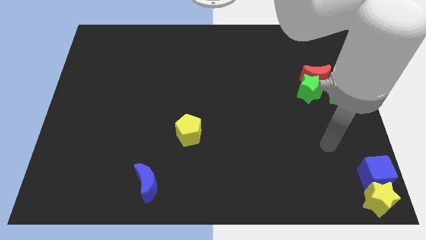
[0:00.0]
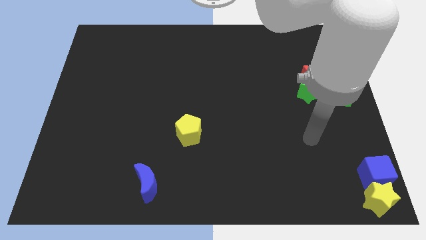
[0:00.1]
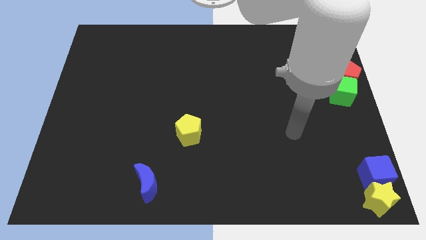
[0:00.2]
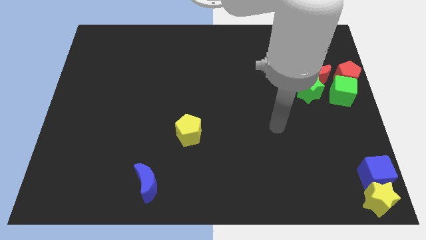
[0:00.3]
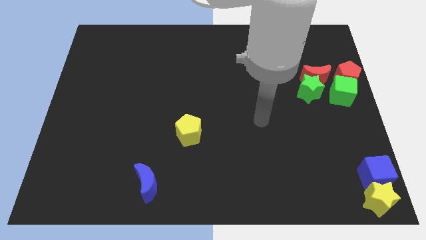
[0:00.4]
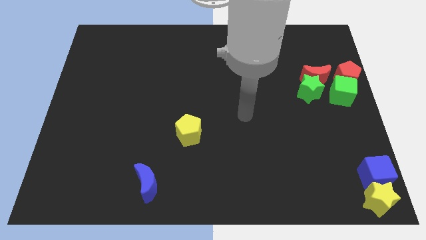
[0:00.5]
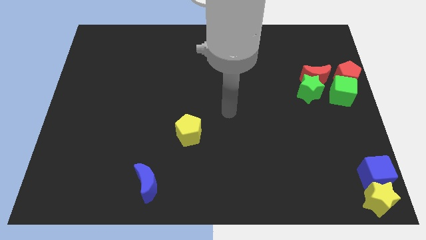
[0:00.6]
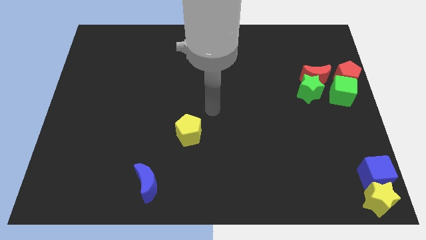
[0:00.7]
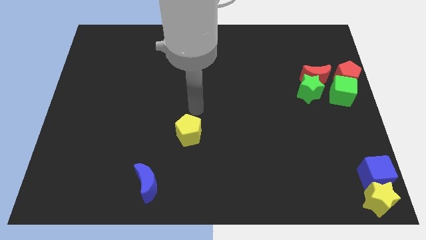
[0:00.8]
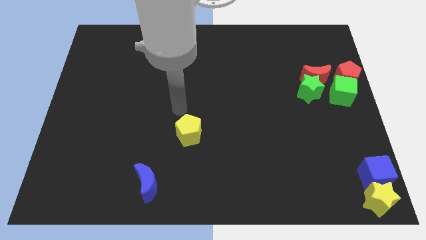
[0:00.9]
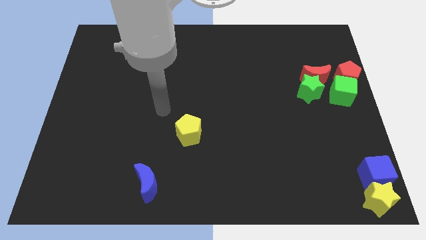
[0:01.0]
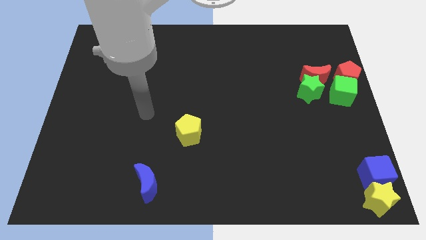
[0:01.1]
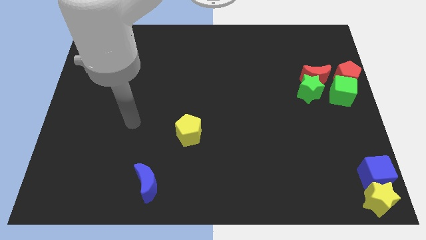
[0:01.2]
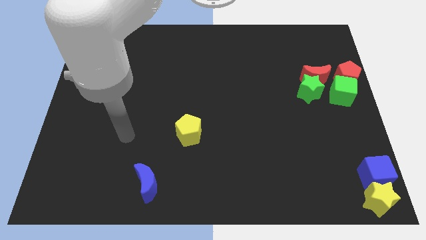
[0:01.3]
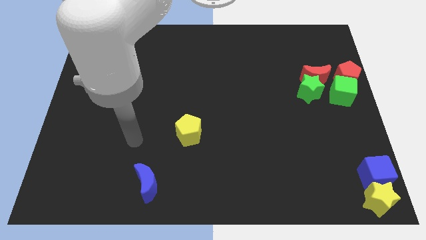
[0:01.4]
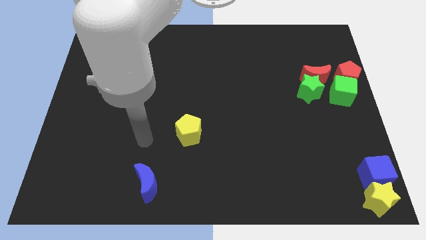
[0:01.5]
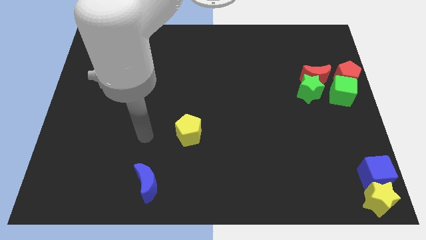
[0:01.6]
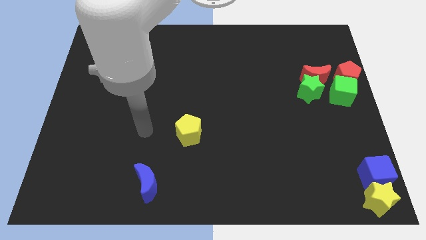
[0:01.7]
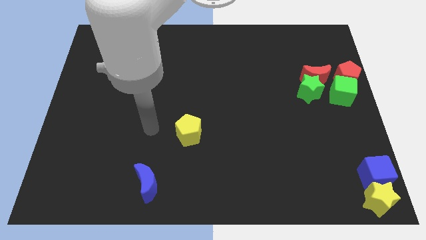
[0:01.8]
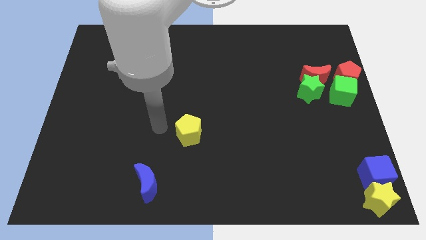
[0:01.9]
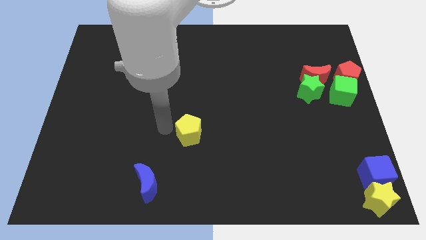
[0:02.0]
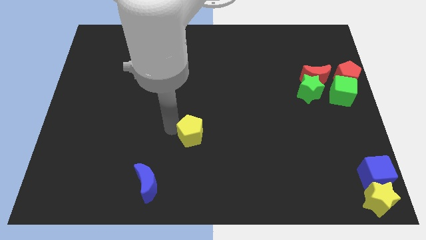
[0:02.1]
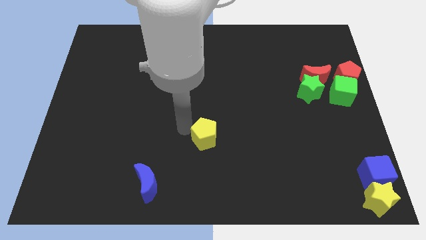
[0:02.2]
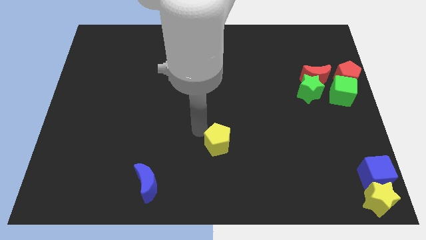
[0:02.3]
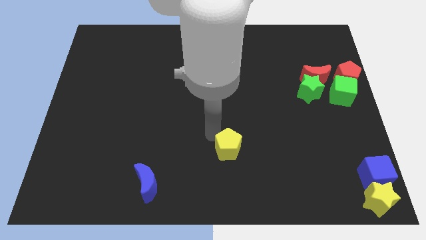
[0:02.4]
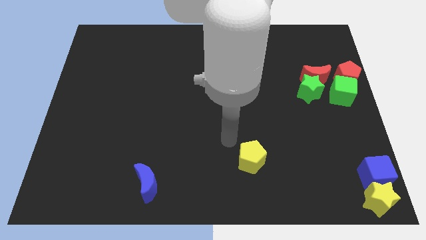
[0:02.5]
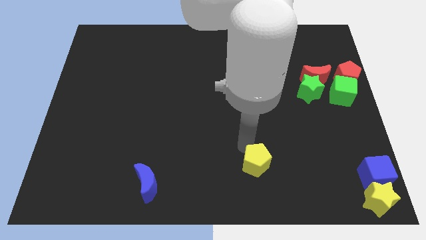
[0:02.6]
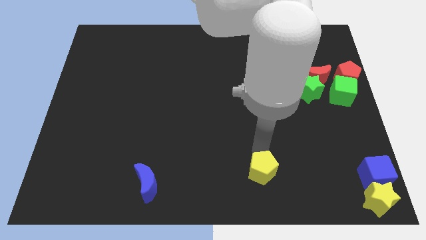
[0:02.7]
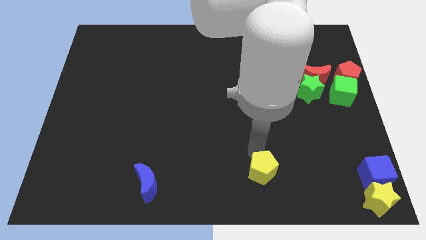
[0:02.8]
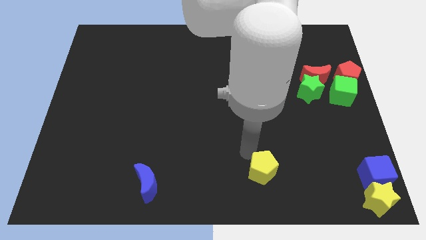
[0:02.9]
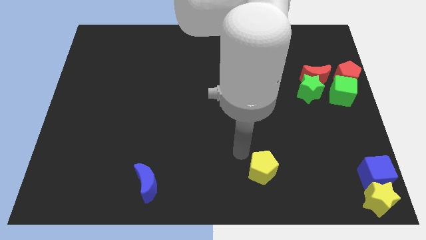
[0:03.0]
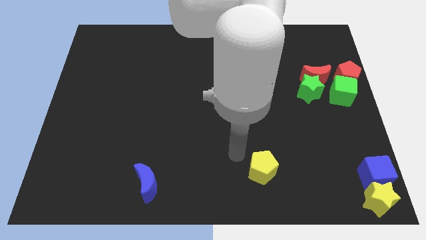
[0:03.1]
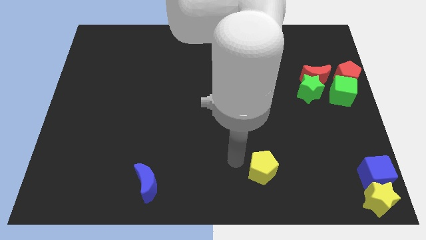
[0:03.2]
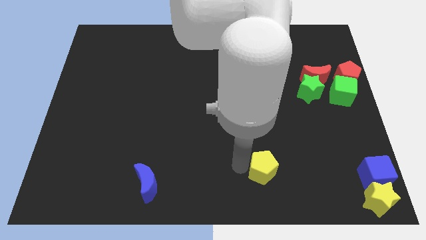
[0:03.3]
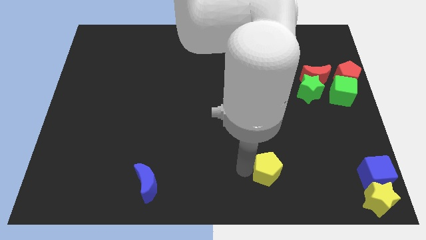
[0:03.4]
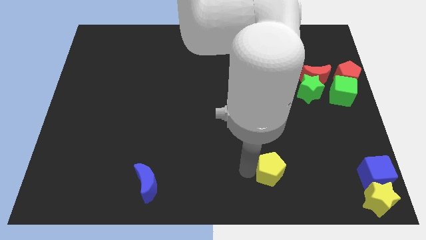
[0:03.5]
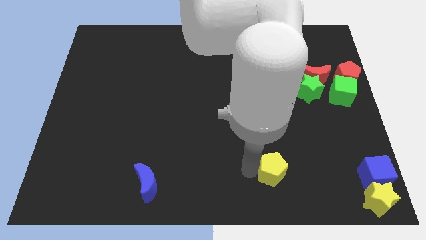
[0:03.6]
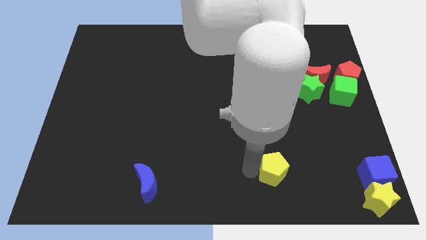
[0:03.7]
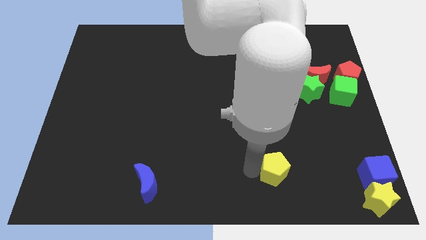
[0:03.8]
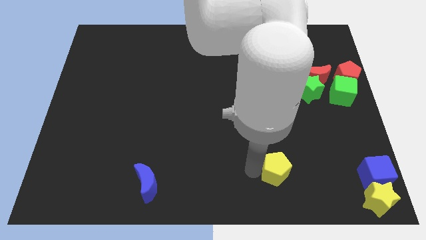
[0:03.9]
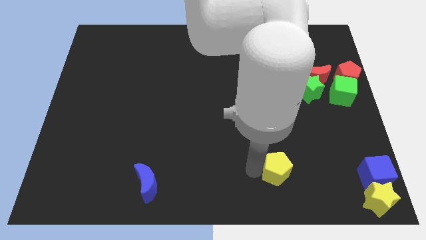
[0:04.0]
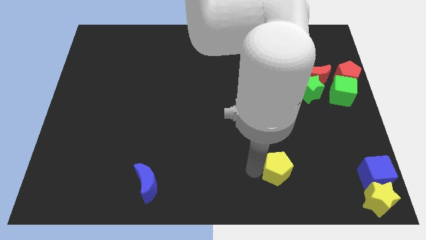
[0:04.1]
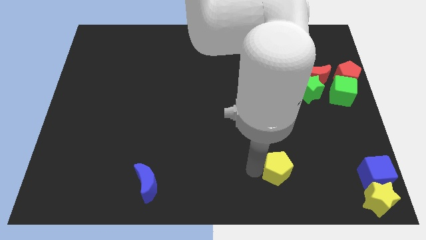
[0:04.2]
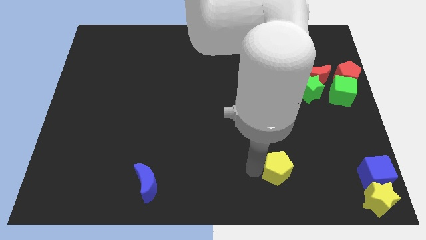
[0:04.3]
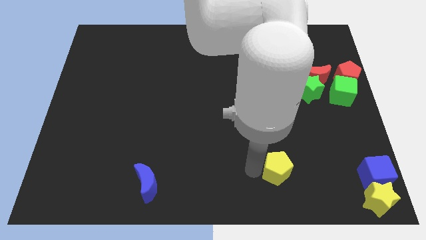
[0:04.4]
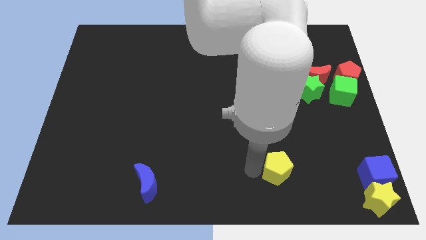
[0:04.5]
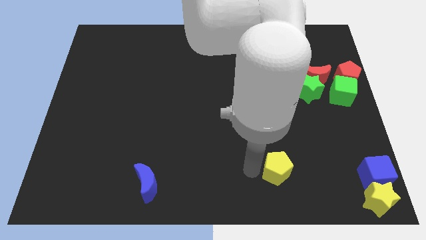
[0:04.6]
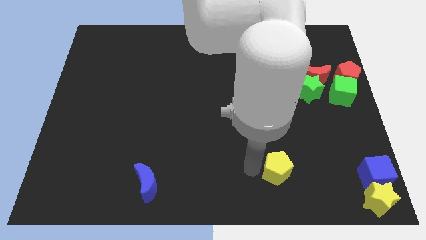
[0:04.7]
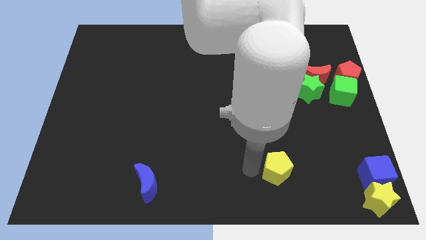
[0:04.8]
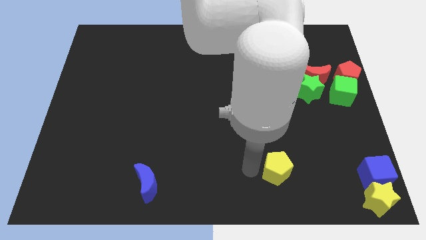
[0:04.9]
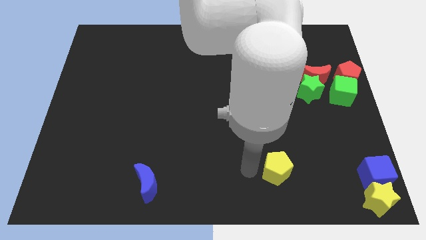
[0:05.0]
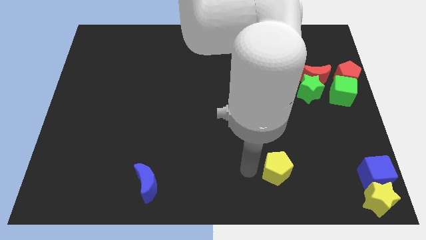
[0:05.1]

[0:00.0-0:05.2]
push the yellow pentagon slightly to the bottom right of the board

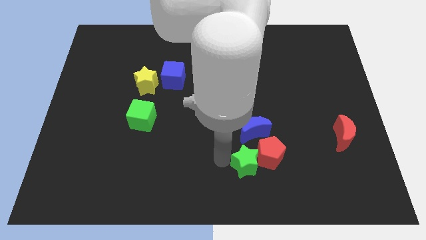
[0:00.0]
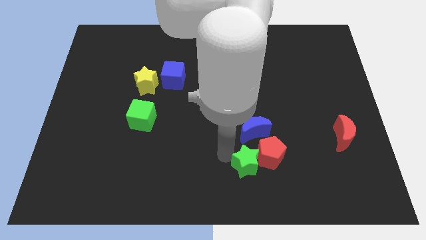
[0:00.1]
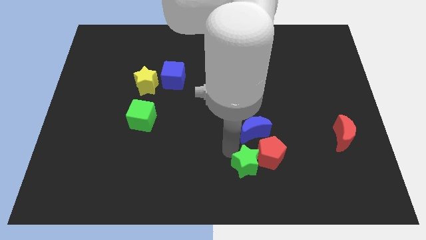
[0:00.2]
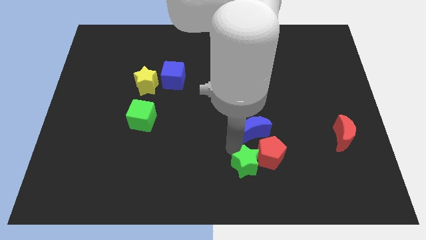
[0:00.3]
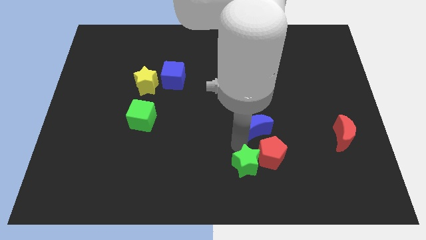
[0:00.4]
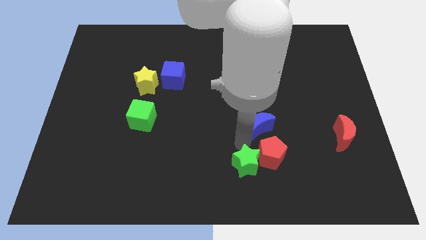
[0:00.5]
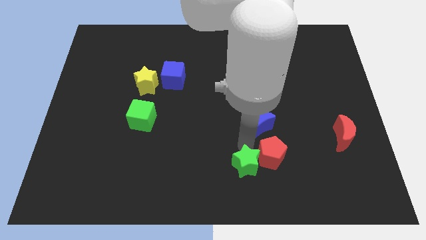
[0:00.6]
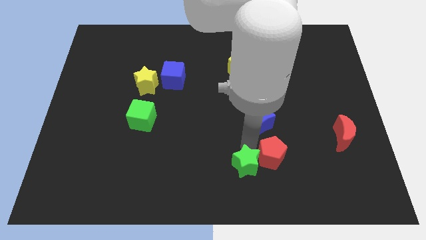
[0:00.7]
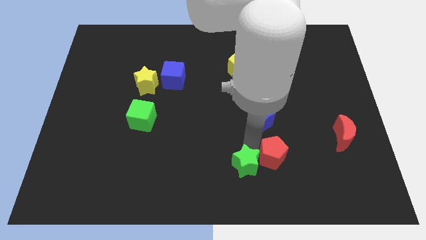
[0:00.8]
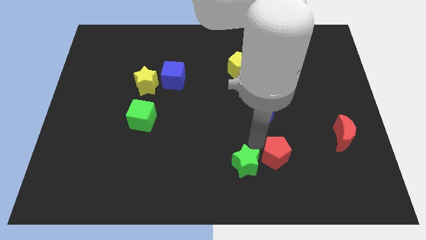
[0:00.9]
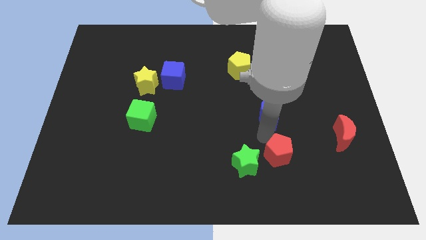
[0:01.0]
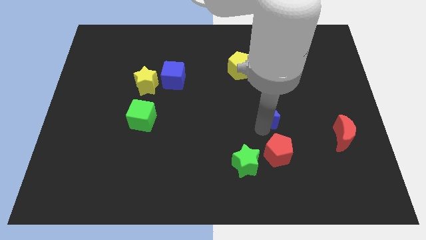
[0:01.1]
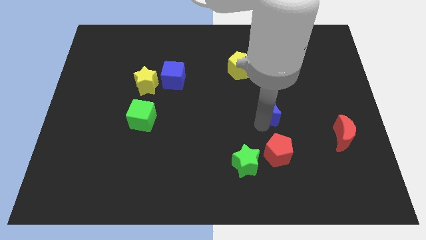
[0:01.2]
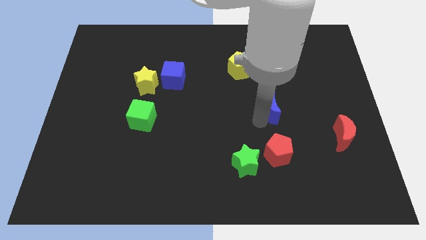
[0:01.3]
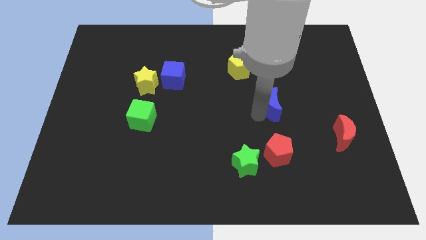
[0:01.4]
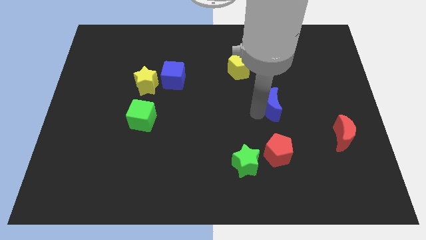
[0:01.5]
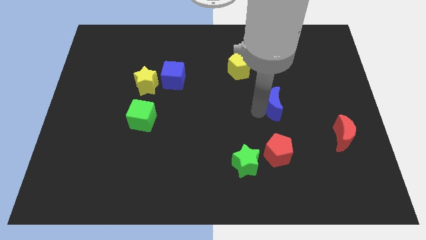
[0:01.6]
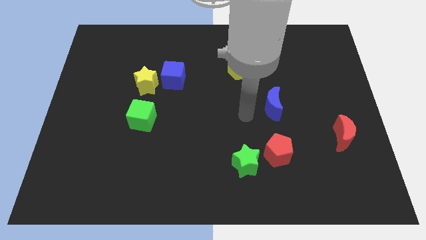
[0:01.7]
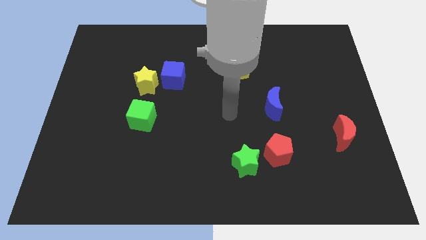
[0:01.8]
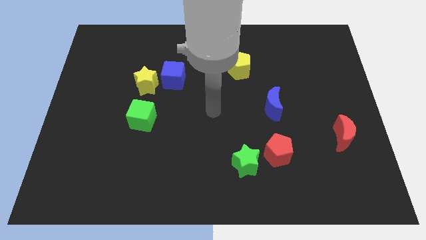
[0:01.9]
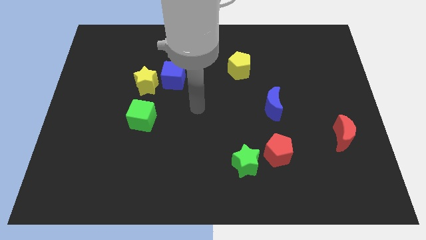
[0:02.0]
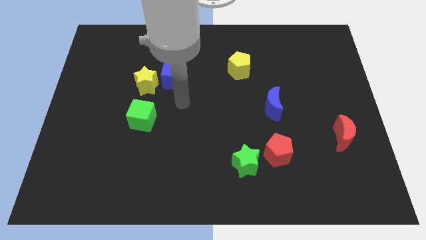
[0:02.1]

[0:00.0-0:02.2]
place the blue crescent vertical to the red pentagon

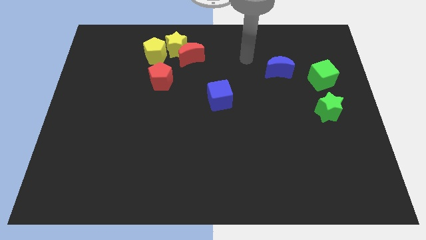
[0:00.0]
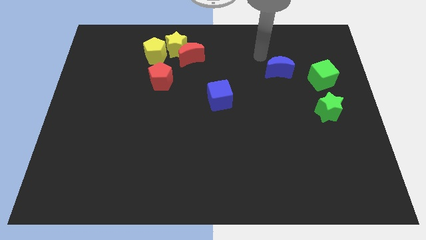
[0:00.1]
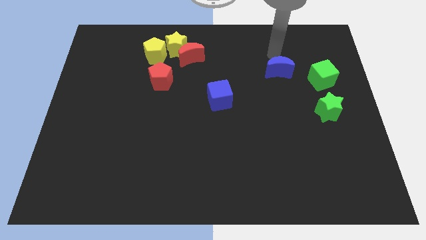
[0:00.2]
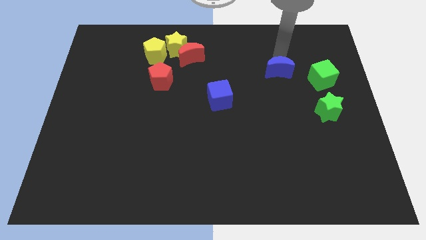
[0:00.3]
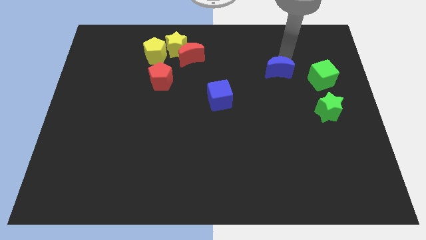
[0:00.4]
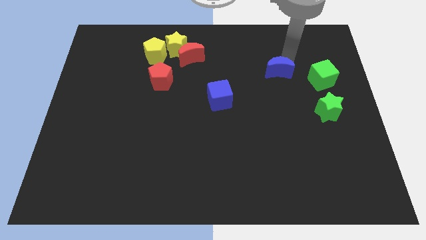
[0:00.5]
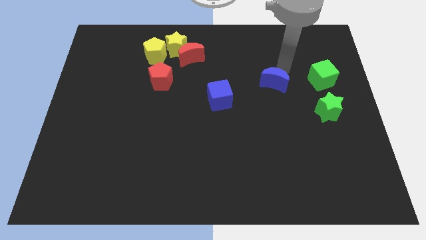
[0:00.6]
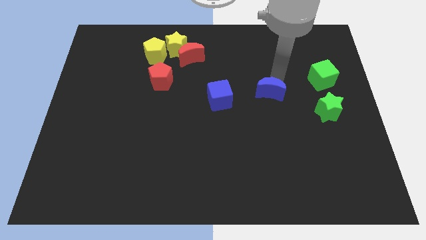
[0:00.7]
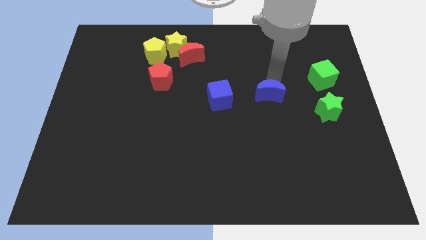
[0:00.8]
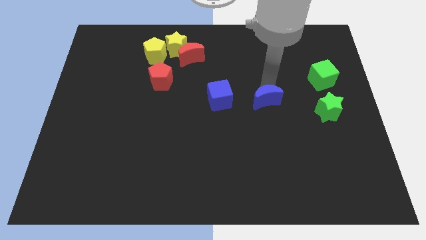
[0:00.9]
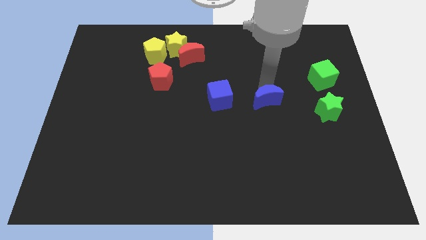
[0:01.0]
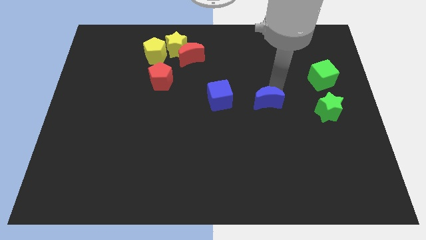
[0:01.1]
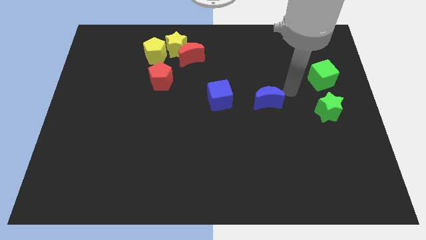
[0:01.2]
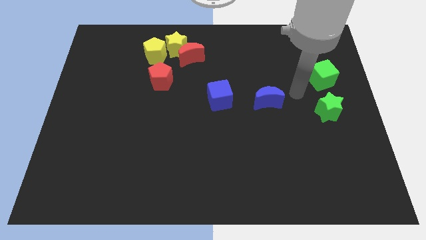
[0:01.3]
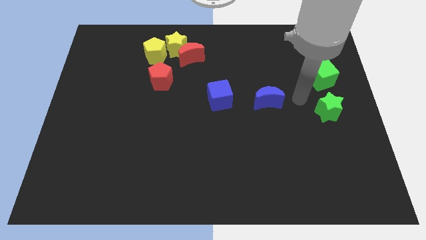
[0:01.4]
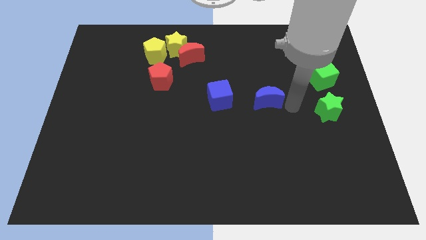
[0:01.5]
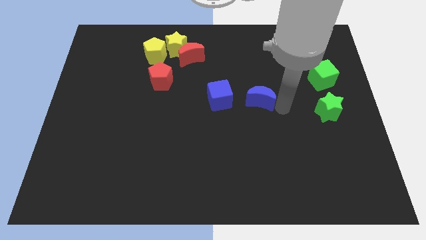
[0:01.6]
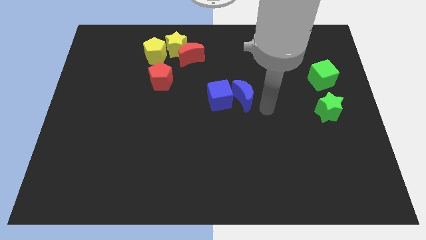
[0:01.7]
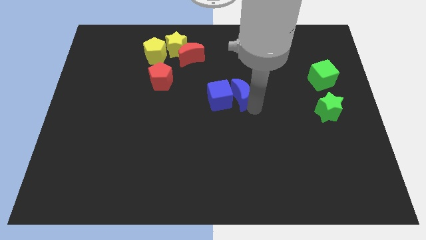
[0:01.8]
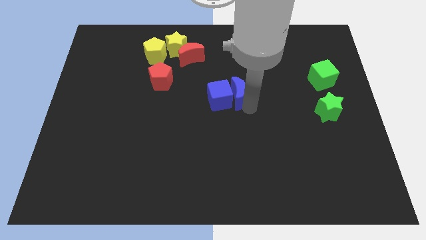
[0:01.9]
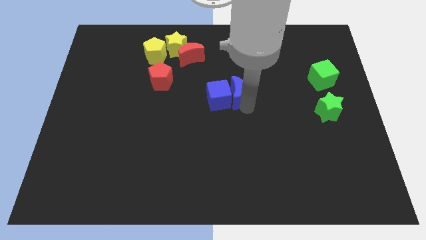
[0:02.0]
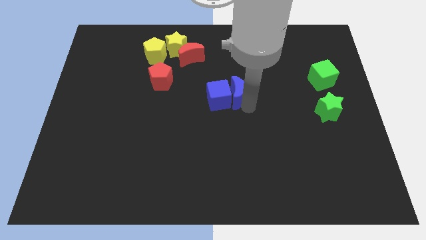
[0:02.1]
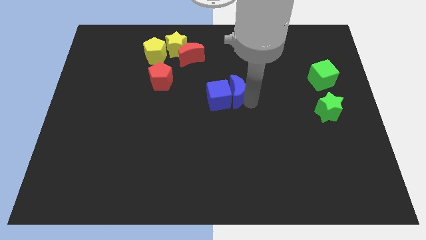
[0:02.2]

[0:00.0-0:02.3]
drag the blue crescent towards the blue cube
